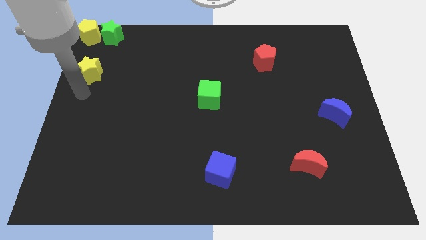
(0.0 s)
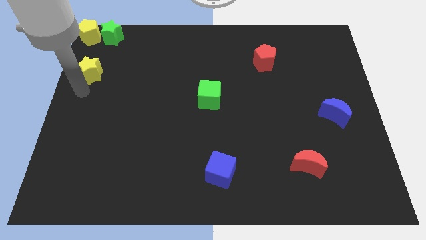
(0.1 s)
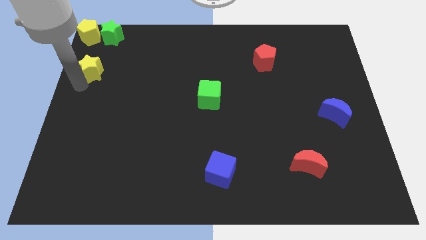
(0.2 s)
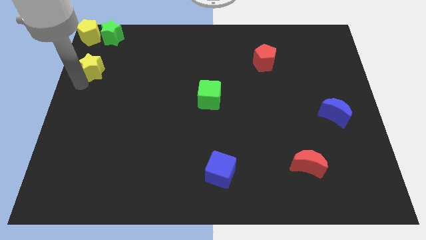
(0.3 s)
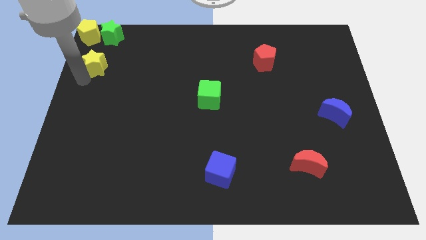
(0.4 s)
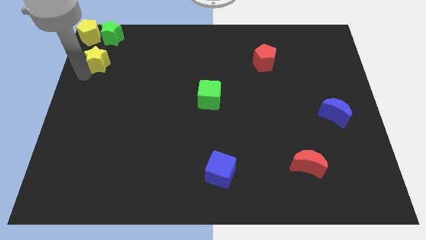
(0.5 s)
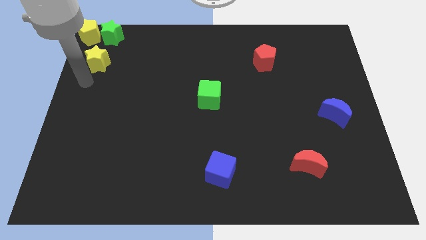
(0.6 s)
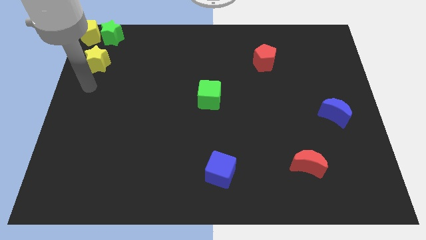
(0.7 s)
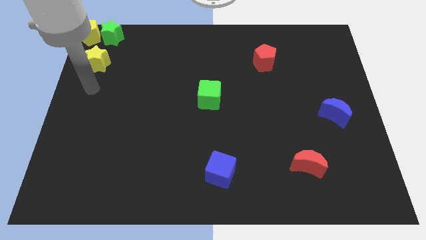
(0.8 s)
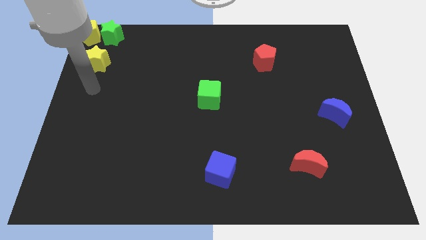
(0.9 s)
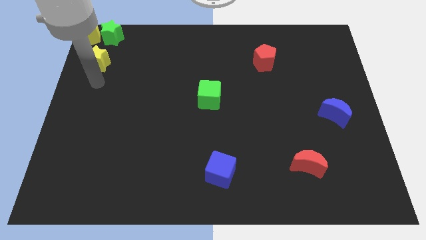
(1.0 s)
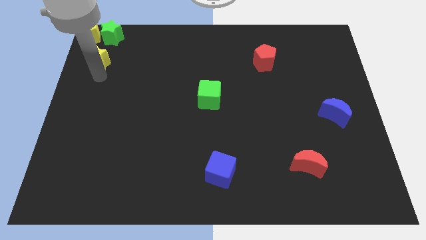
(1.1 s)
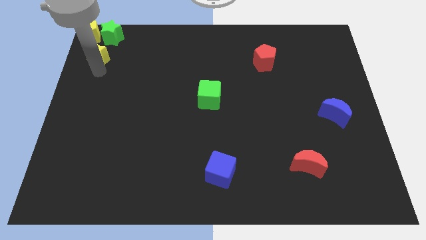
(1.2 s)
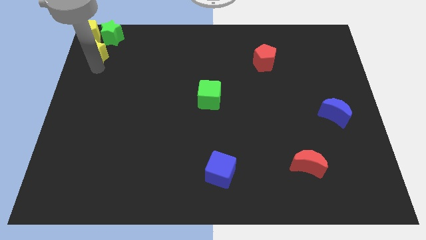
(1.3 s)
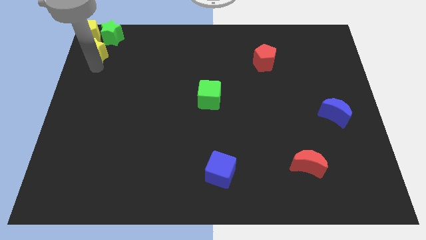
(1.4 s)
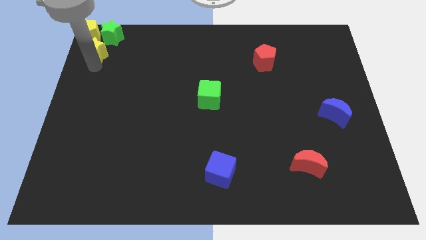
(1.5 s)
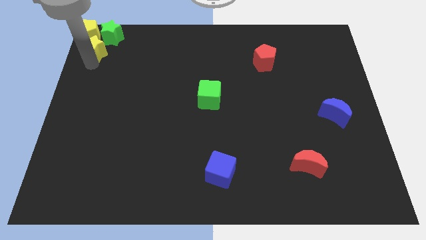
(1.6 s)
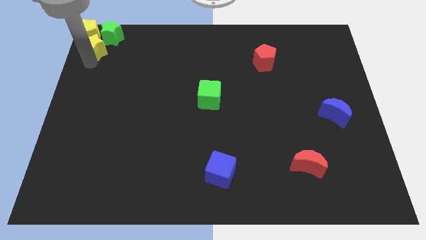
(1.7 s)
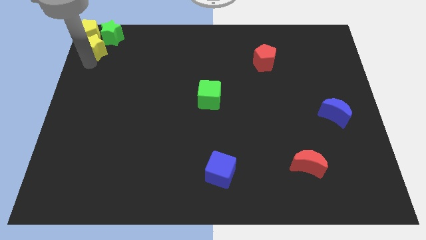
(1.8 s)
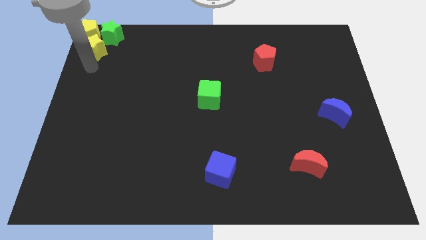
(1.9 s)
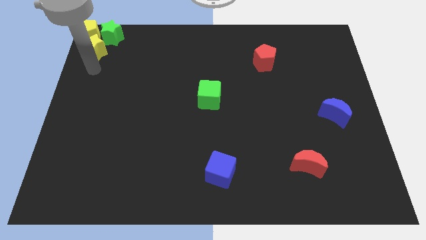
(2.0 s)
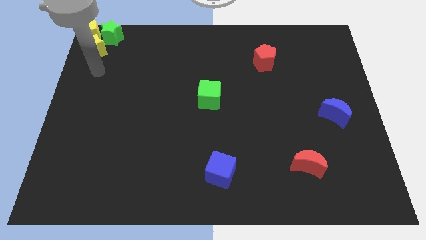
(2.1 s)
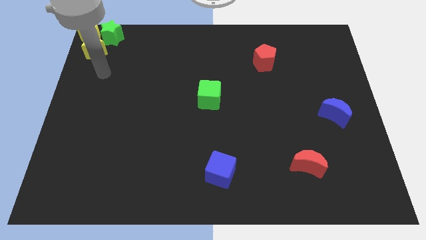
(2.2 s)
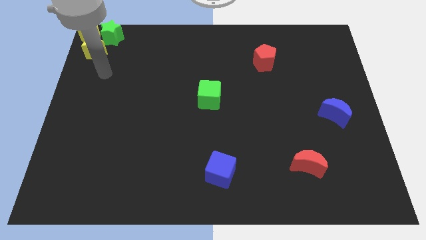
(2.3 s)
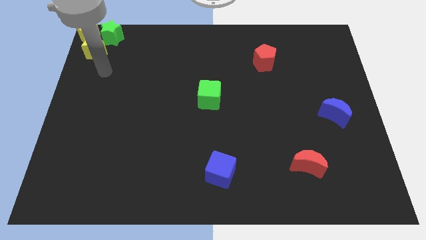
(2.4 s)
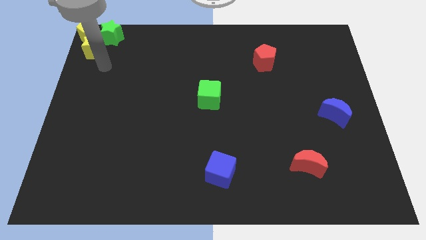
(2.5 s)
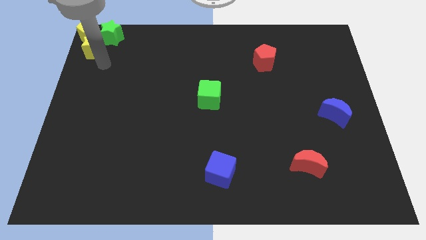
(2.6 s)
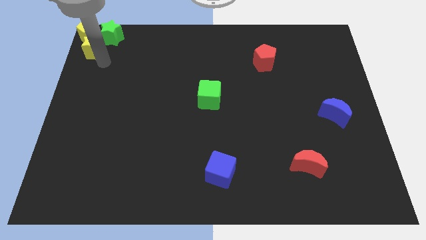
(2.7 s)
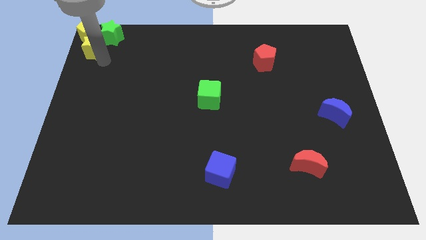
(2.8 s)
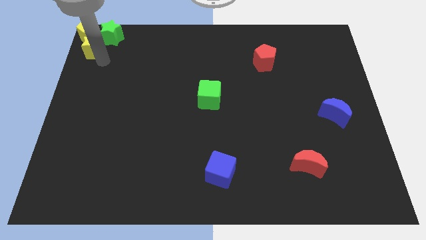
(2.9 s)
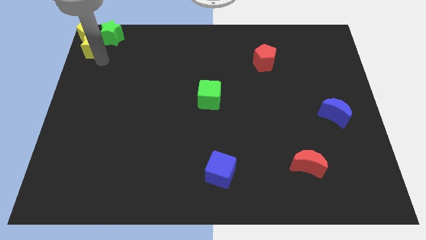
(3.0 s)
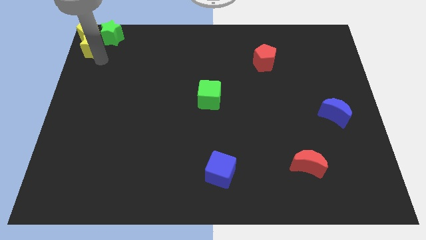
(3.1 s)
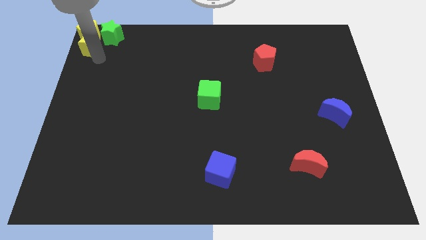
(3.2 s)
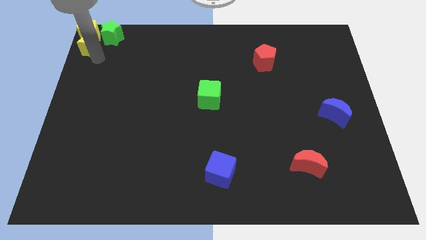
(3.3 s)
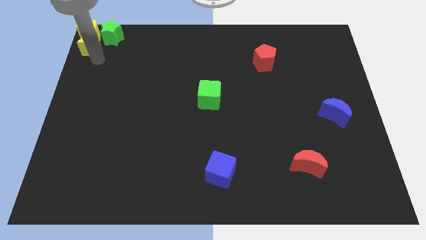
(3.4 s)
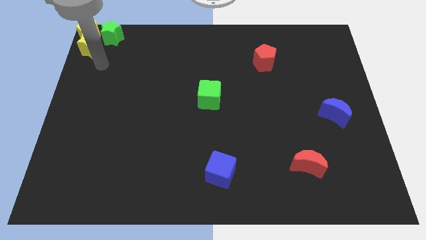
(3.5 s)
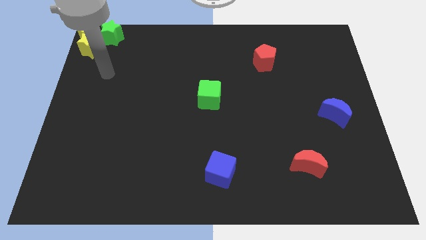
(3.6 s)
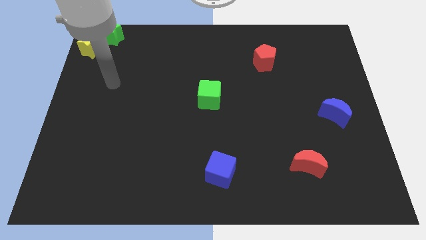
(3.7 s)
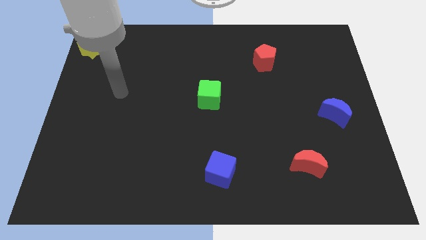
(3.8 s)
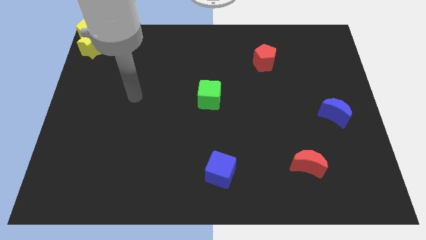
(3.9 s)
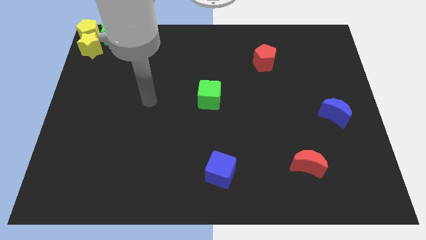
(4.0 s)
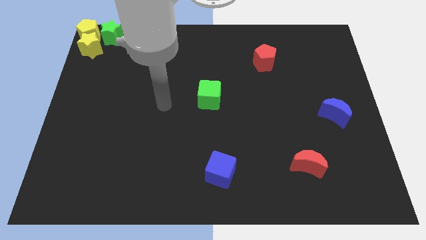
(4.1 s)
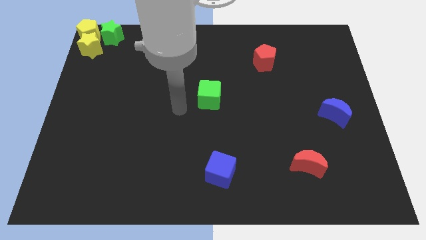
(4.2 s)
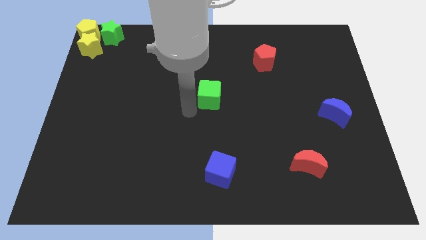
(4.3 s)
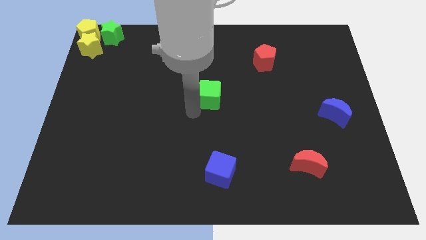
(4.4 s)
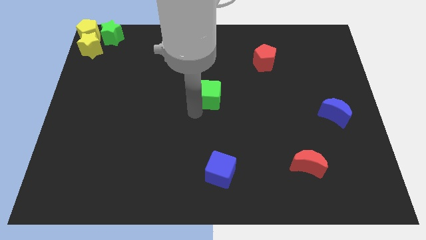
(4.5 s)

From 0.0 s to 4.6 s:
move the yellow star into the yellow pentagon

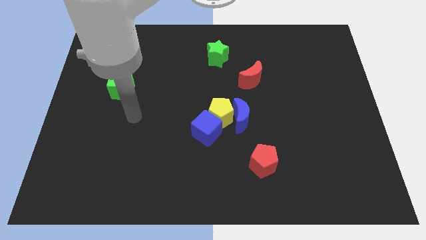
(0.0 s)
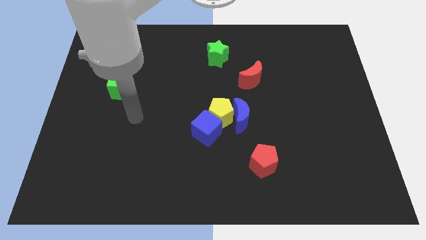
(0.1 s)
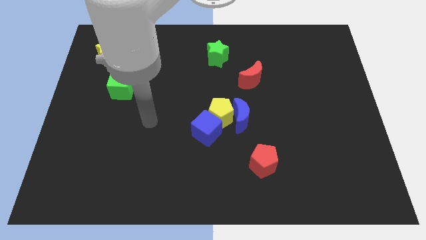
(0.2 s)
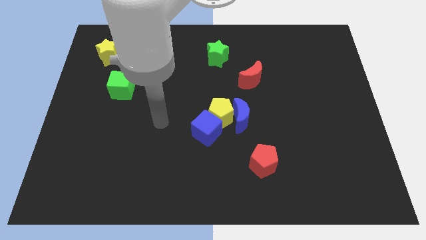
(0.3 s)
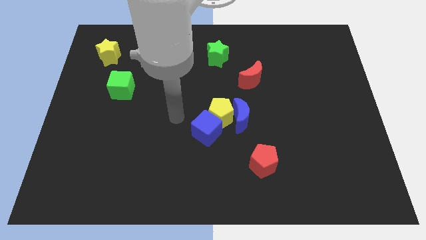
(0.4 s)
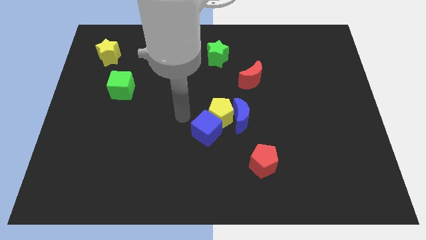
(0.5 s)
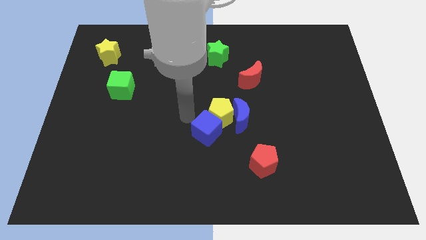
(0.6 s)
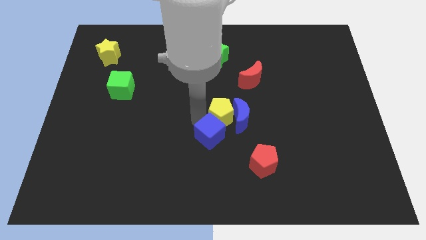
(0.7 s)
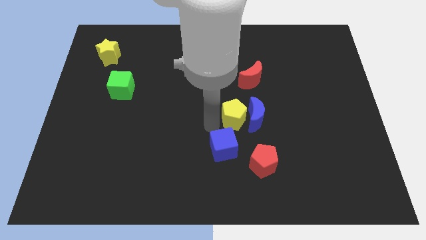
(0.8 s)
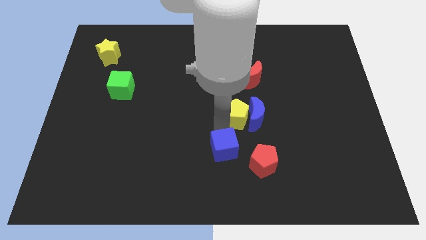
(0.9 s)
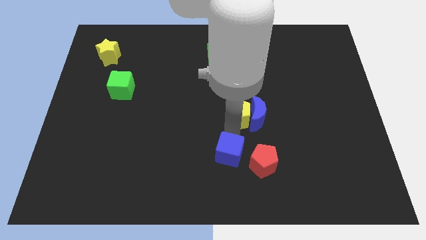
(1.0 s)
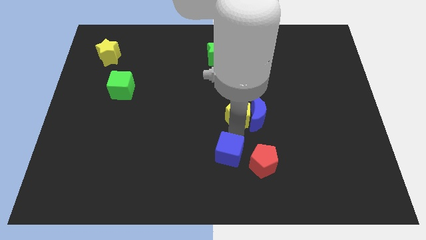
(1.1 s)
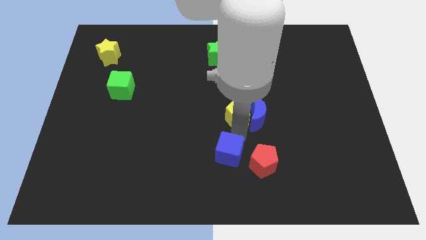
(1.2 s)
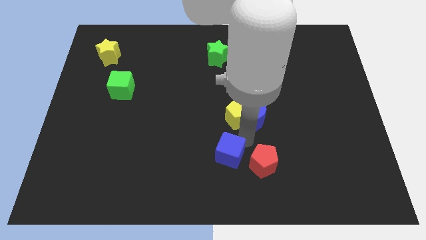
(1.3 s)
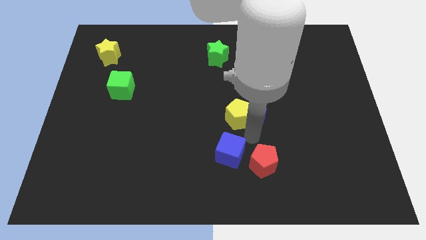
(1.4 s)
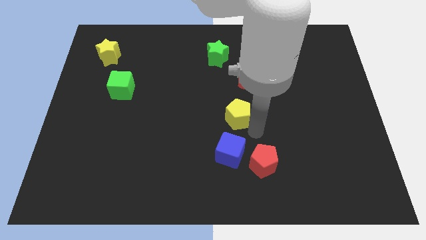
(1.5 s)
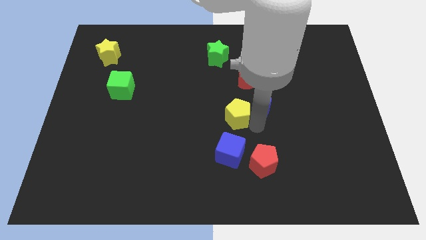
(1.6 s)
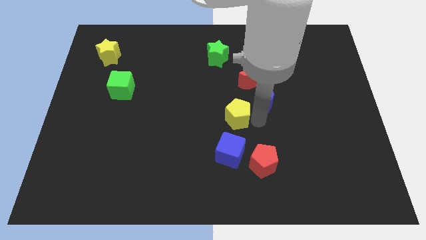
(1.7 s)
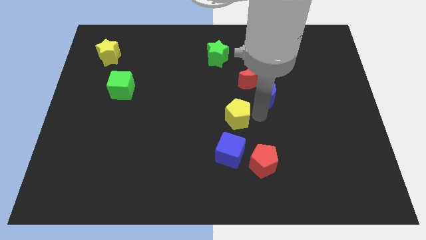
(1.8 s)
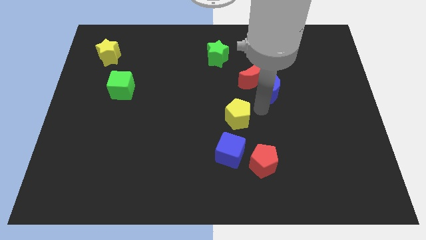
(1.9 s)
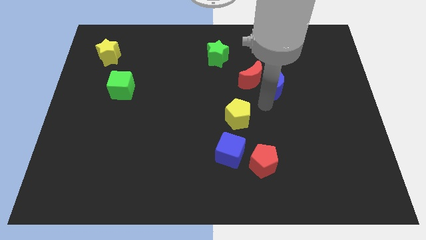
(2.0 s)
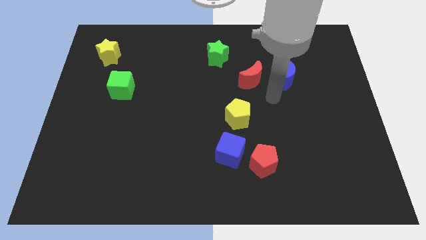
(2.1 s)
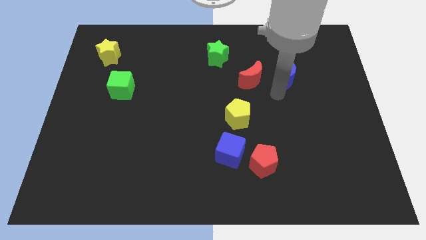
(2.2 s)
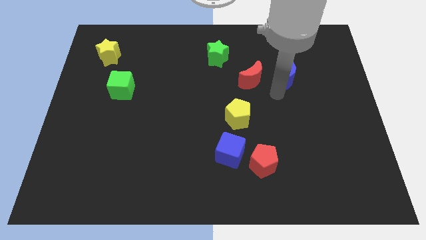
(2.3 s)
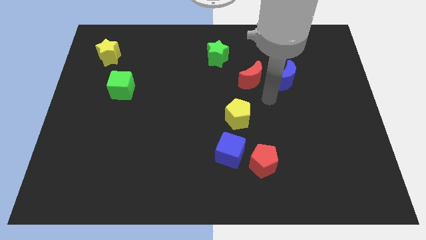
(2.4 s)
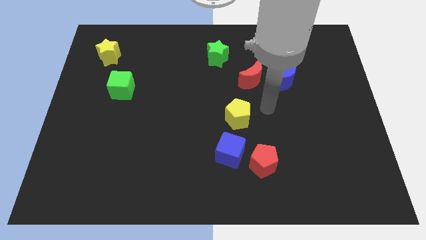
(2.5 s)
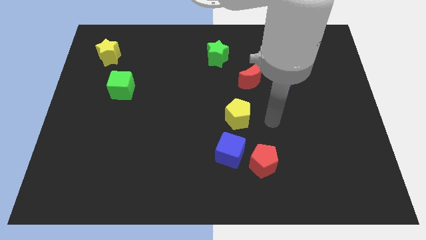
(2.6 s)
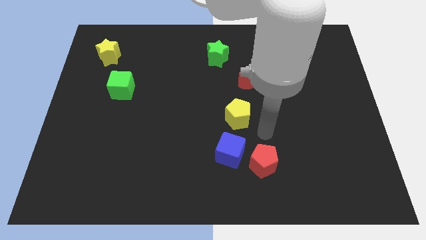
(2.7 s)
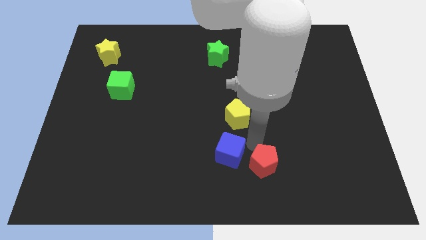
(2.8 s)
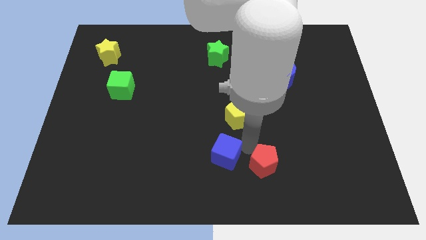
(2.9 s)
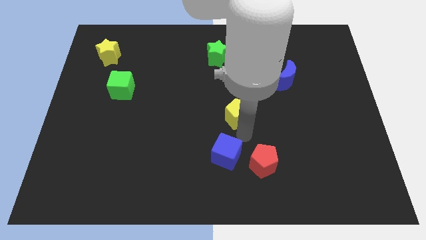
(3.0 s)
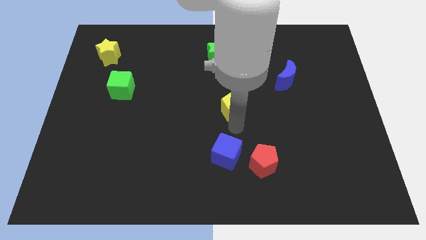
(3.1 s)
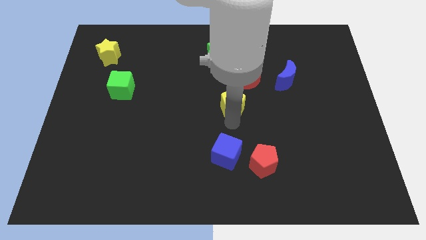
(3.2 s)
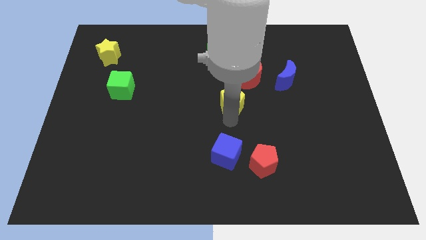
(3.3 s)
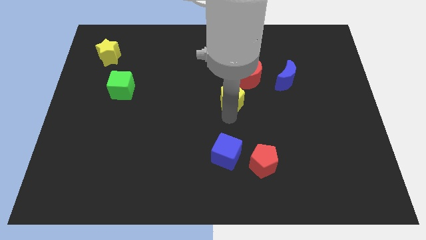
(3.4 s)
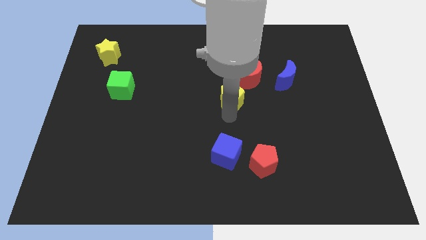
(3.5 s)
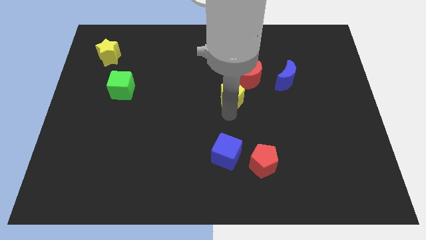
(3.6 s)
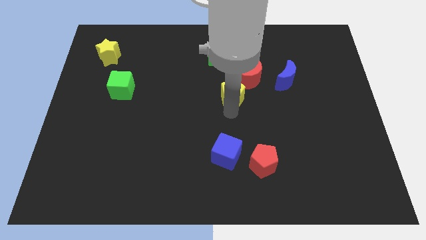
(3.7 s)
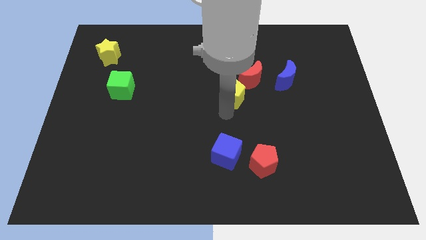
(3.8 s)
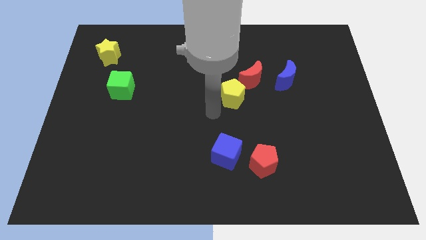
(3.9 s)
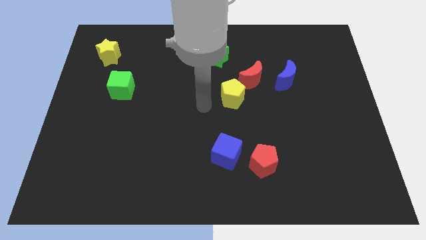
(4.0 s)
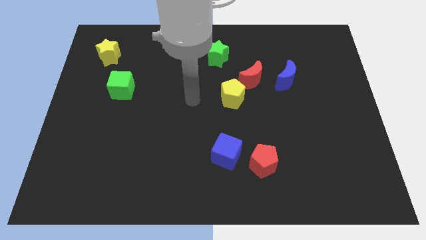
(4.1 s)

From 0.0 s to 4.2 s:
separate the yellow pentagon and blue blocks

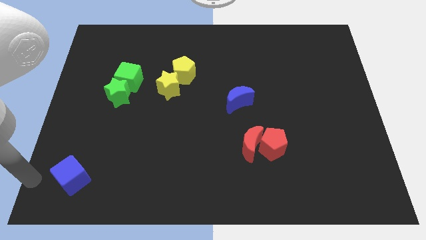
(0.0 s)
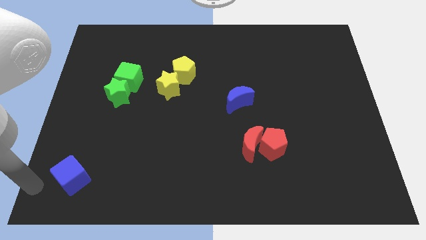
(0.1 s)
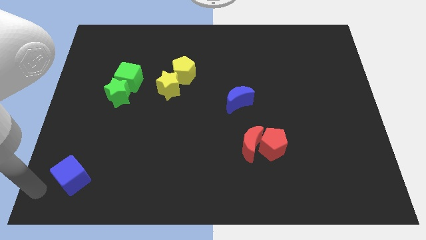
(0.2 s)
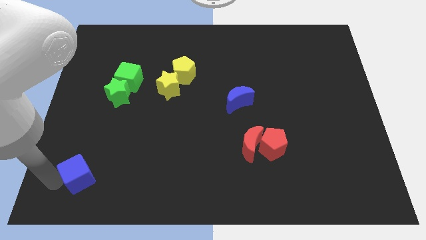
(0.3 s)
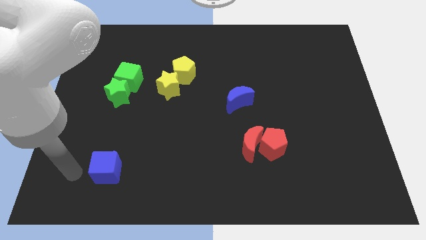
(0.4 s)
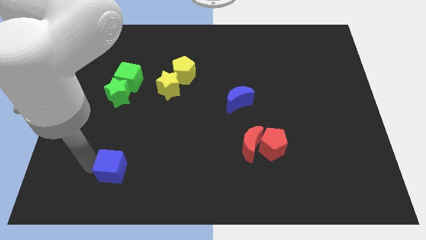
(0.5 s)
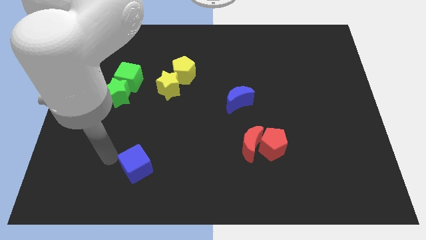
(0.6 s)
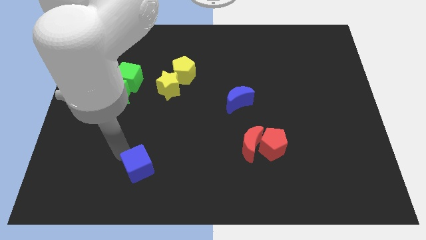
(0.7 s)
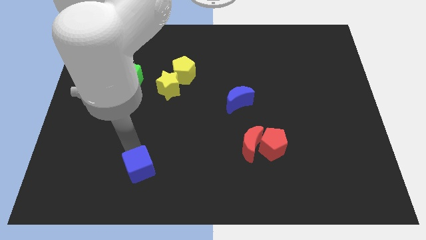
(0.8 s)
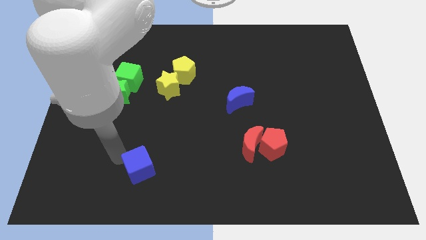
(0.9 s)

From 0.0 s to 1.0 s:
push the blue cube towards center of the board
